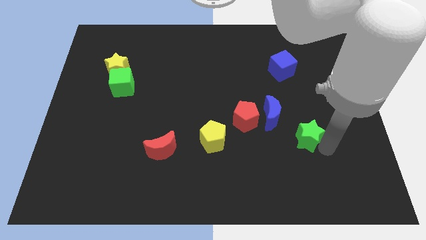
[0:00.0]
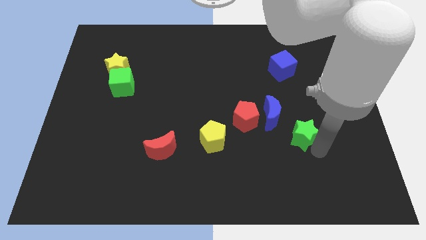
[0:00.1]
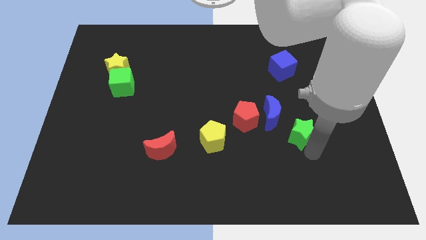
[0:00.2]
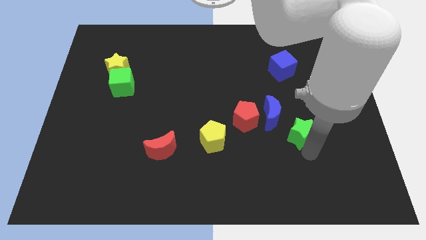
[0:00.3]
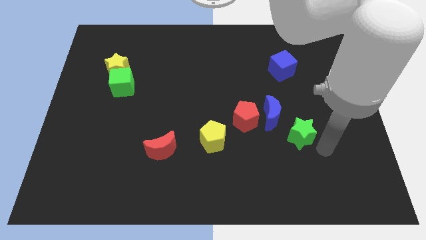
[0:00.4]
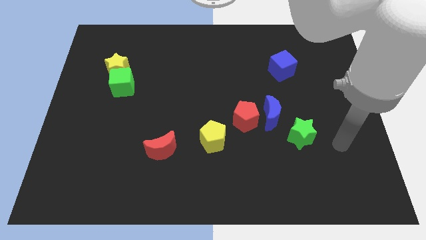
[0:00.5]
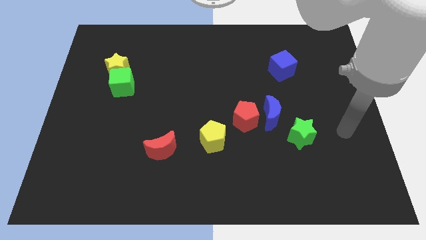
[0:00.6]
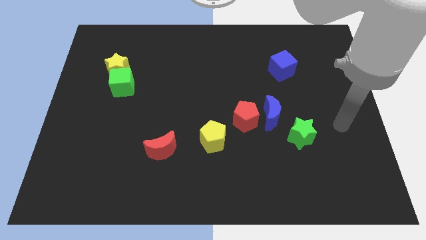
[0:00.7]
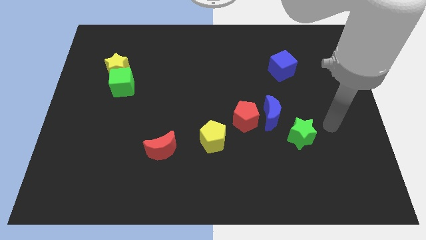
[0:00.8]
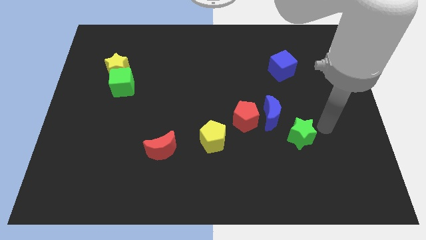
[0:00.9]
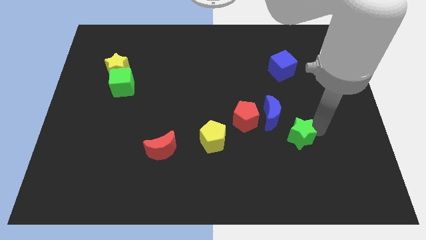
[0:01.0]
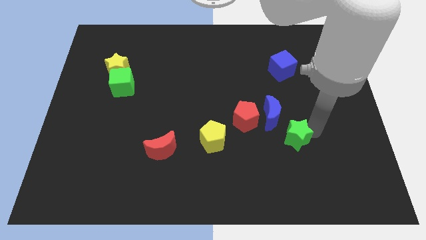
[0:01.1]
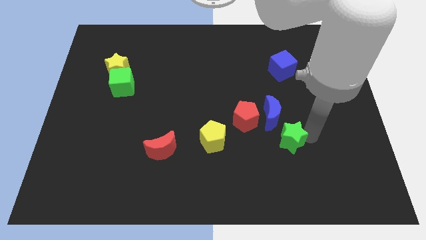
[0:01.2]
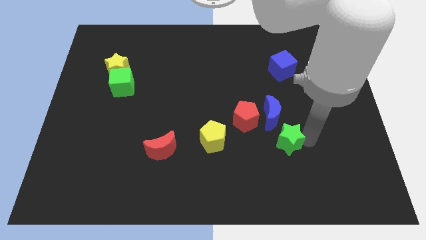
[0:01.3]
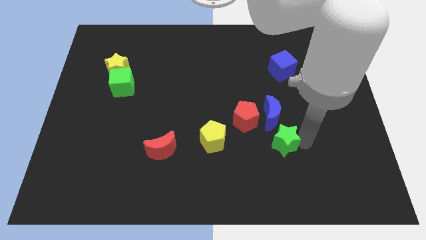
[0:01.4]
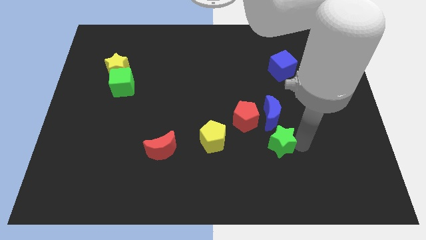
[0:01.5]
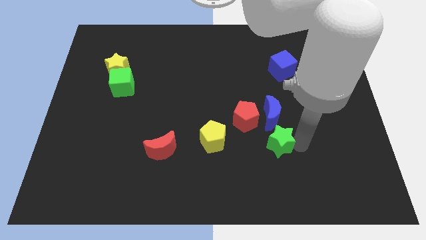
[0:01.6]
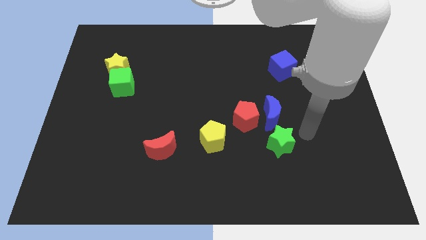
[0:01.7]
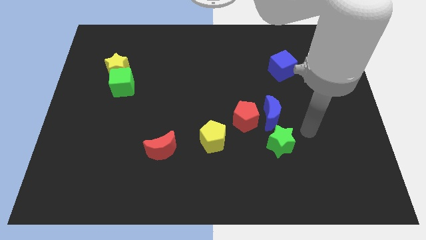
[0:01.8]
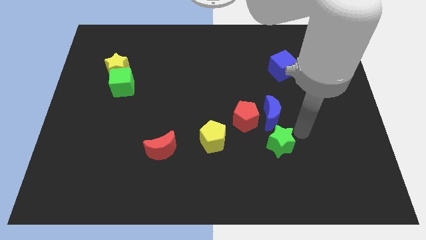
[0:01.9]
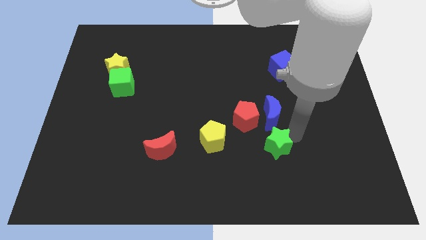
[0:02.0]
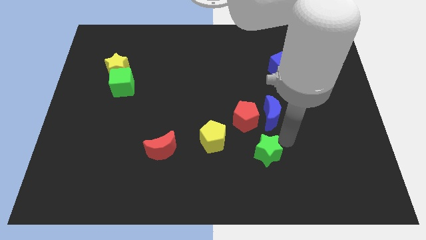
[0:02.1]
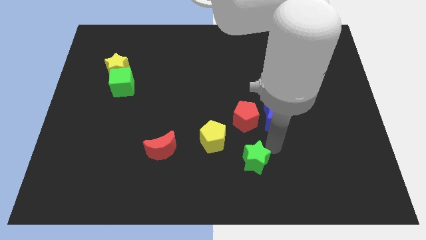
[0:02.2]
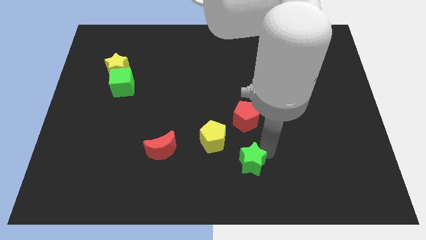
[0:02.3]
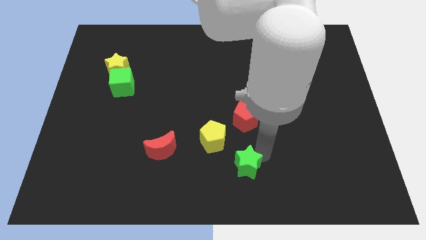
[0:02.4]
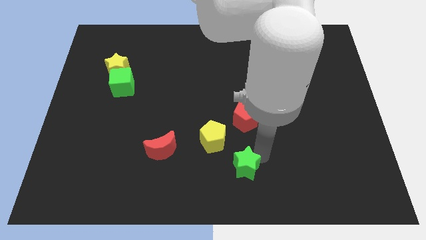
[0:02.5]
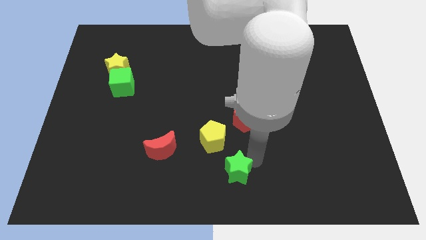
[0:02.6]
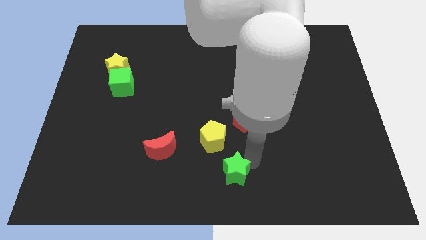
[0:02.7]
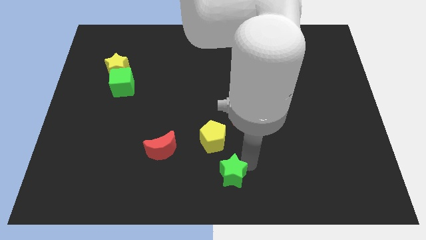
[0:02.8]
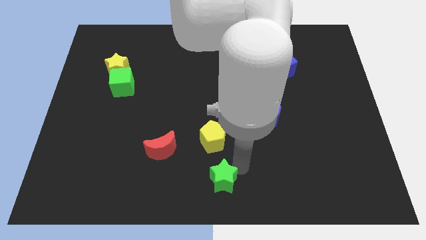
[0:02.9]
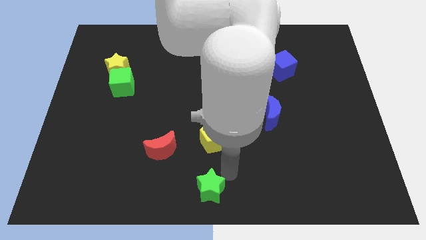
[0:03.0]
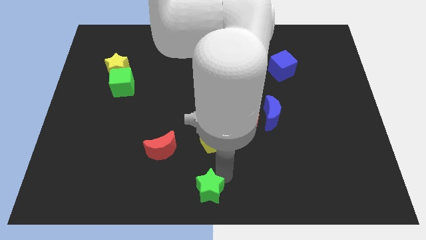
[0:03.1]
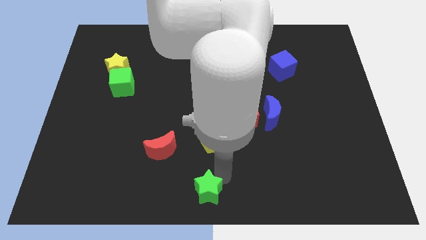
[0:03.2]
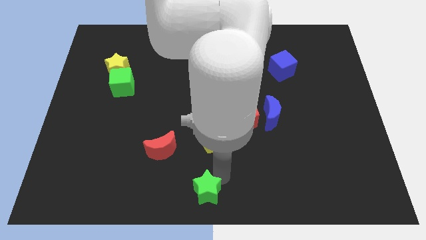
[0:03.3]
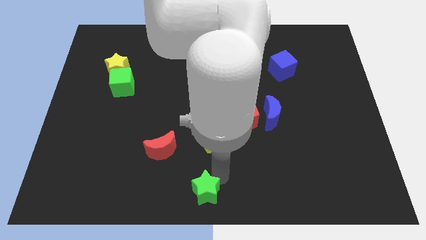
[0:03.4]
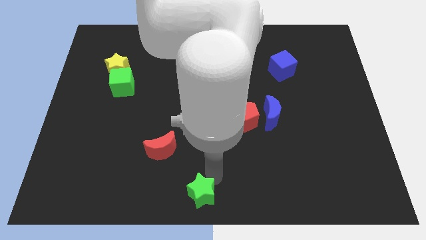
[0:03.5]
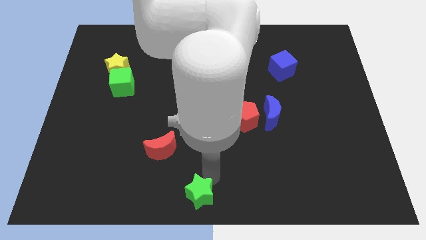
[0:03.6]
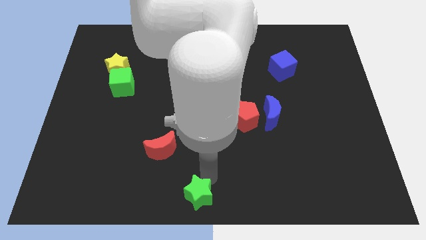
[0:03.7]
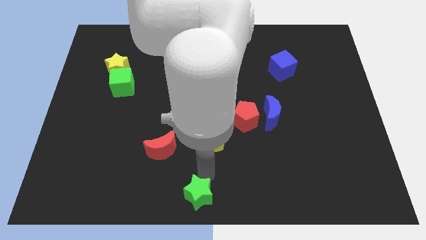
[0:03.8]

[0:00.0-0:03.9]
move the green star to the bottom center of the table

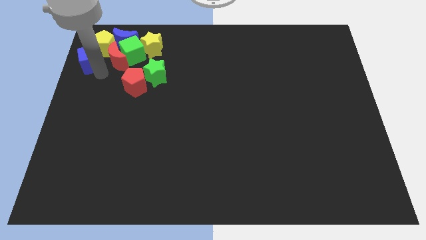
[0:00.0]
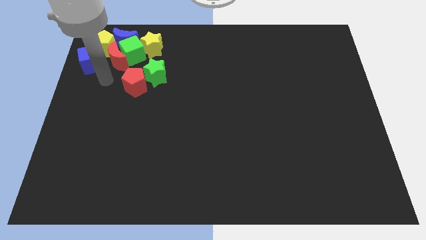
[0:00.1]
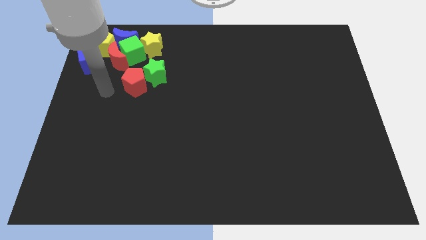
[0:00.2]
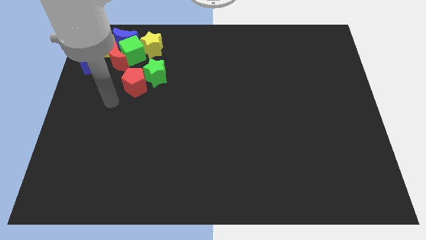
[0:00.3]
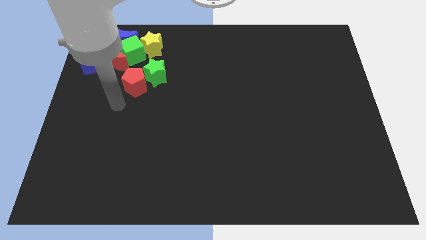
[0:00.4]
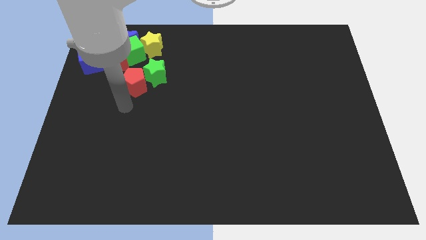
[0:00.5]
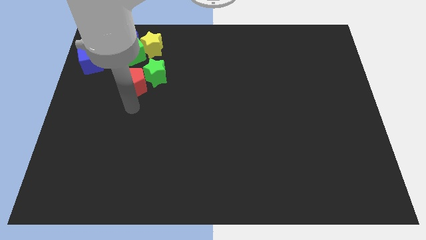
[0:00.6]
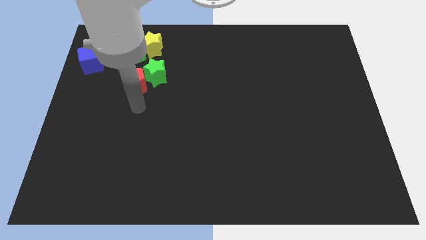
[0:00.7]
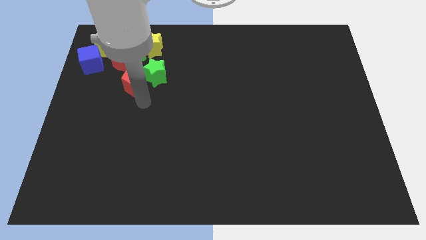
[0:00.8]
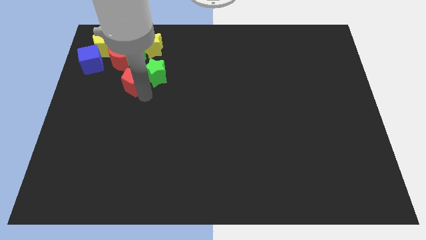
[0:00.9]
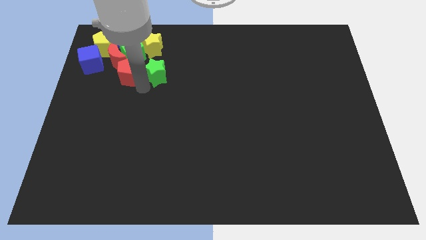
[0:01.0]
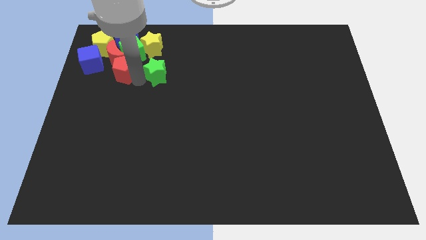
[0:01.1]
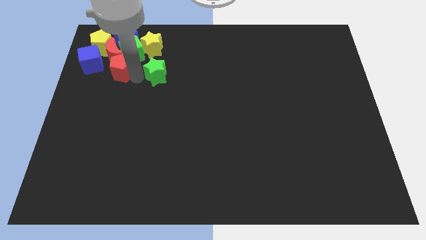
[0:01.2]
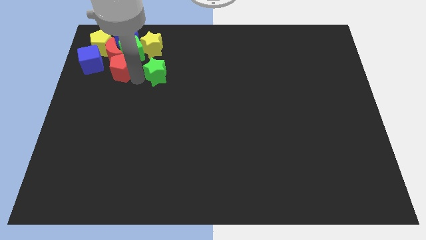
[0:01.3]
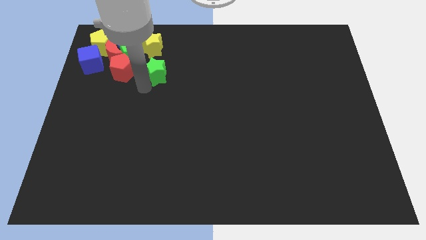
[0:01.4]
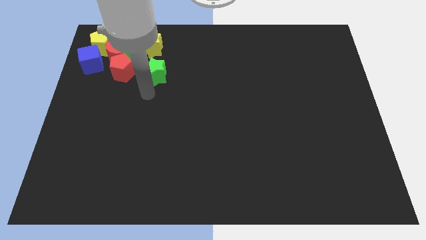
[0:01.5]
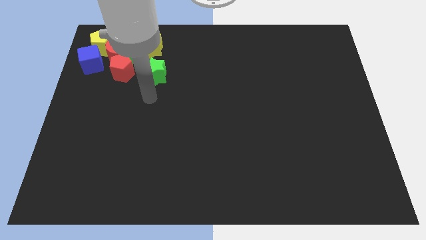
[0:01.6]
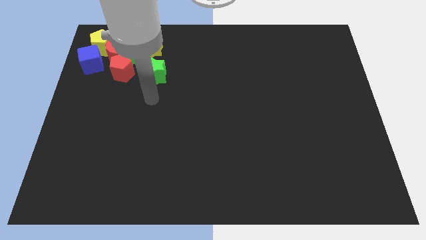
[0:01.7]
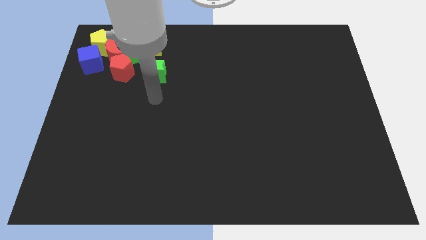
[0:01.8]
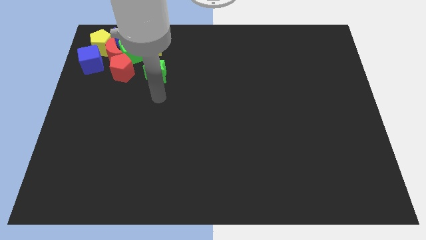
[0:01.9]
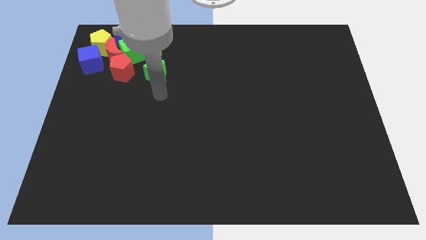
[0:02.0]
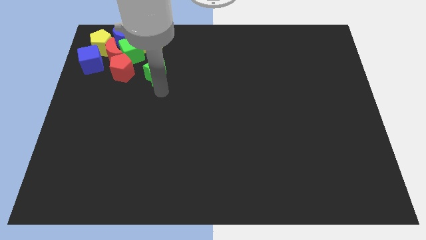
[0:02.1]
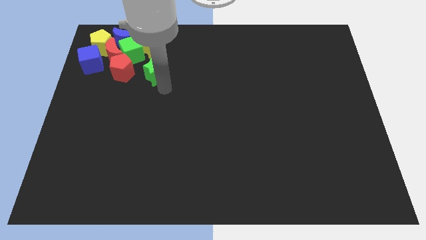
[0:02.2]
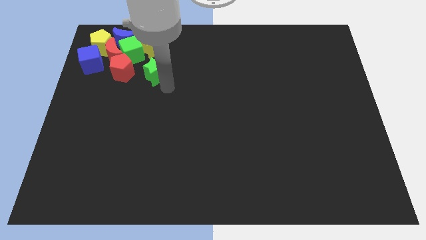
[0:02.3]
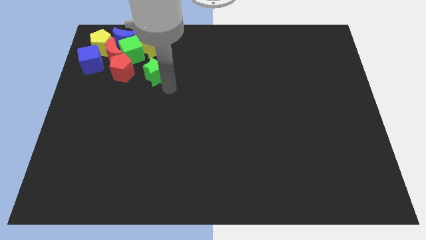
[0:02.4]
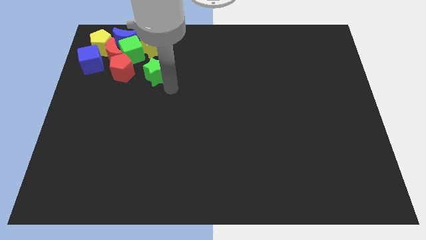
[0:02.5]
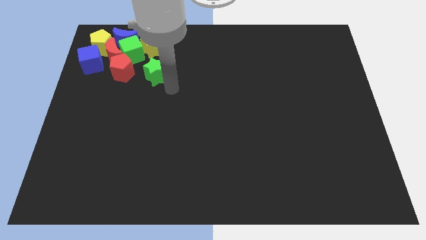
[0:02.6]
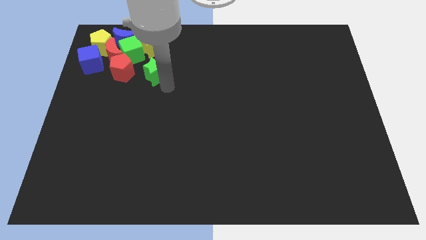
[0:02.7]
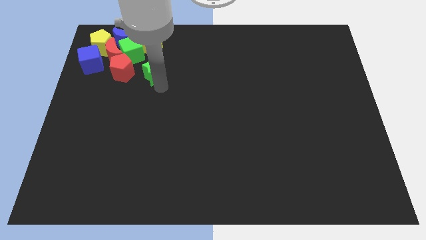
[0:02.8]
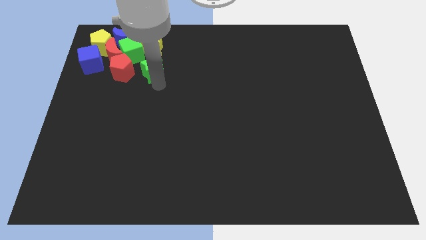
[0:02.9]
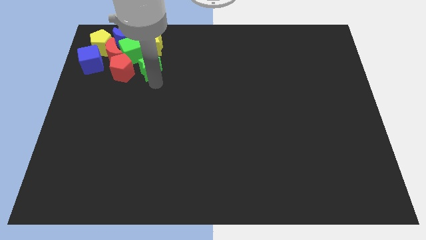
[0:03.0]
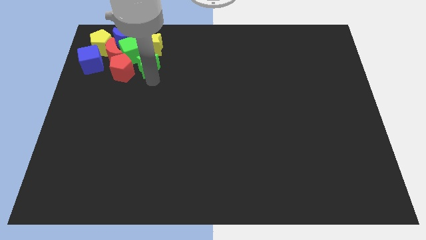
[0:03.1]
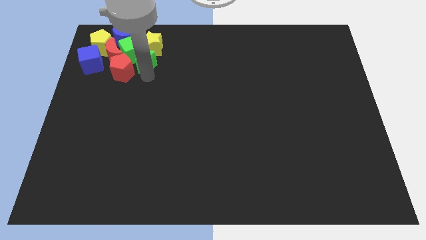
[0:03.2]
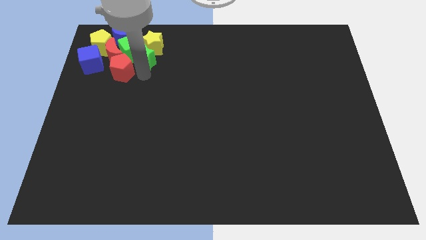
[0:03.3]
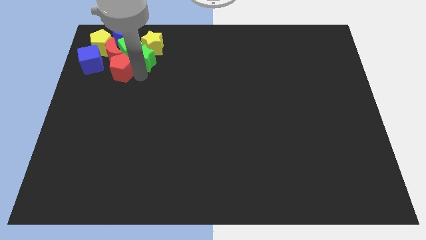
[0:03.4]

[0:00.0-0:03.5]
slide the green star into the green cube

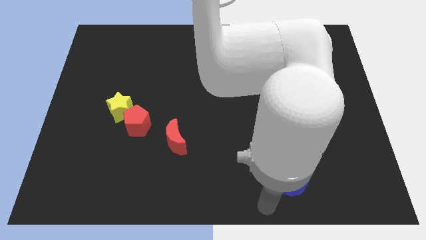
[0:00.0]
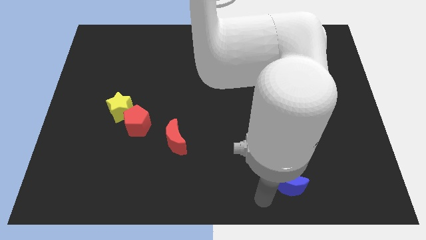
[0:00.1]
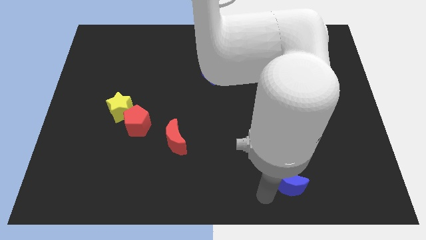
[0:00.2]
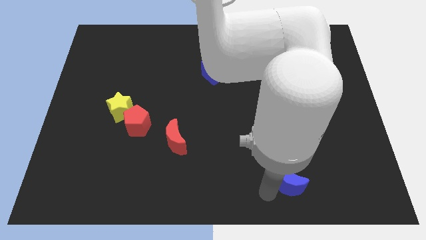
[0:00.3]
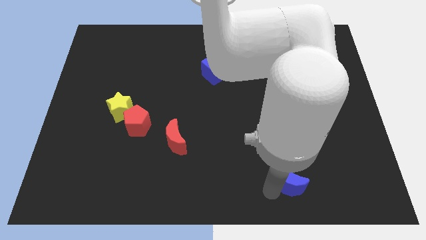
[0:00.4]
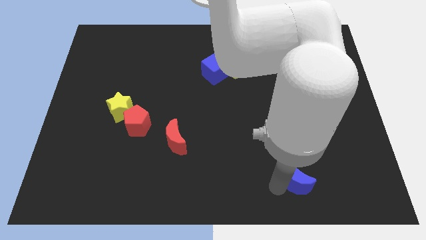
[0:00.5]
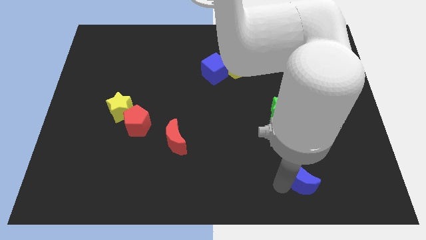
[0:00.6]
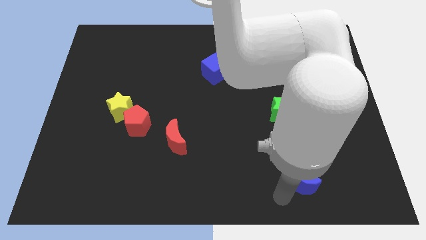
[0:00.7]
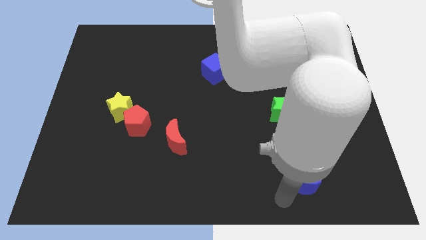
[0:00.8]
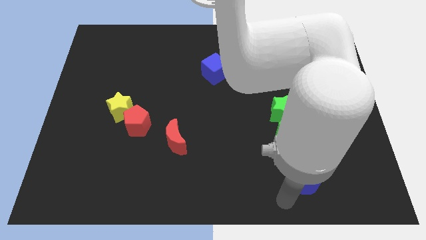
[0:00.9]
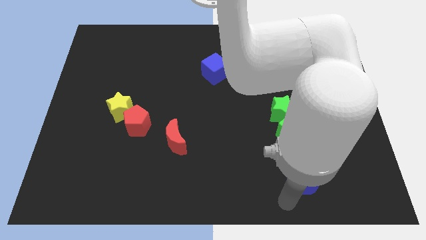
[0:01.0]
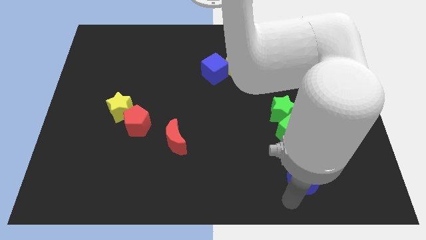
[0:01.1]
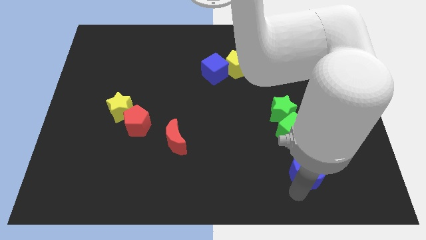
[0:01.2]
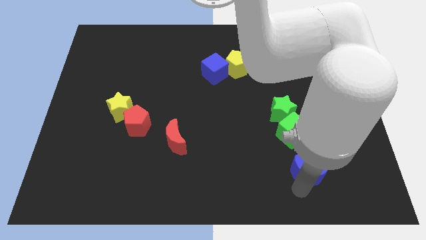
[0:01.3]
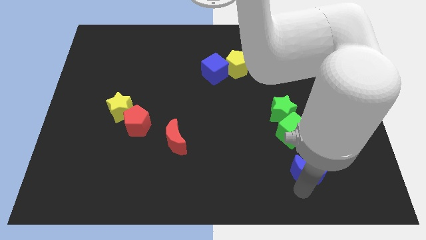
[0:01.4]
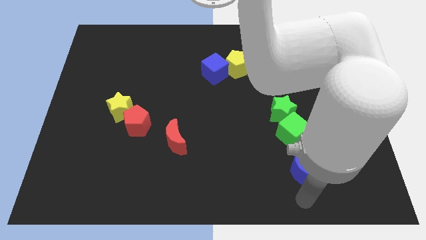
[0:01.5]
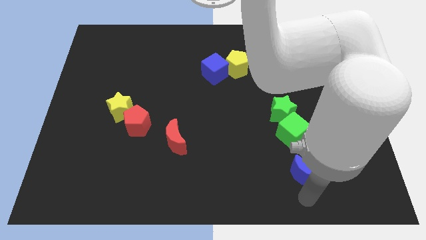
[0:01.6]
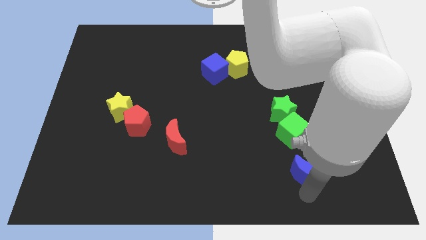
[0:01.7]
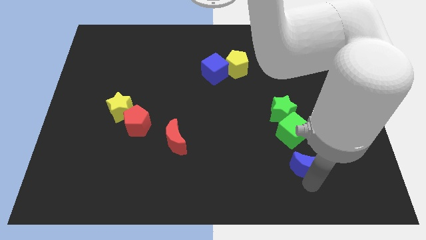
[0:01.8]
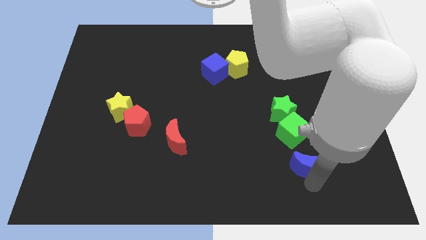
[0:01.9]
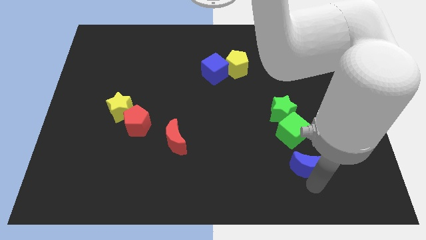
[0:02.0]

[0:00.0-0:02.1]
push blue moon towards green cube
